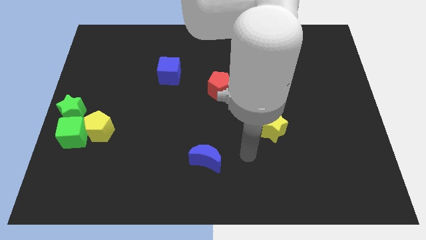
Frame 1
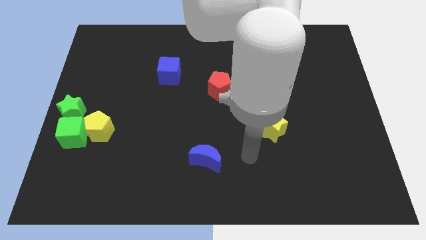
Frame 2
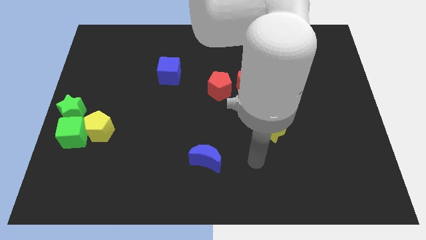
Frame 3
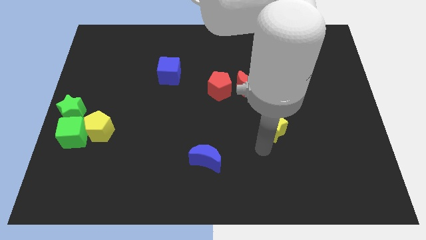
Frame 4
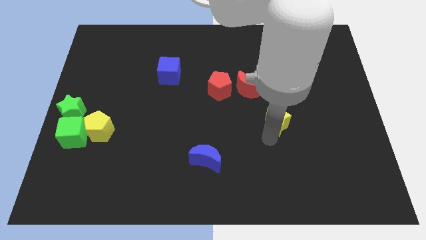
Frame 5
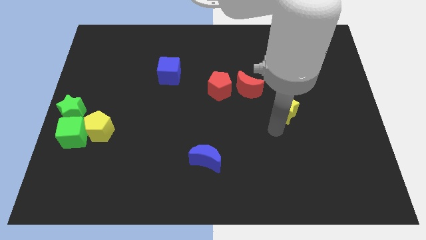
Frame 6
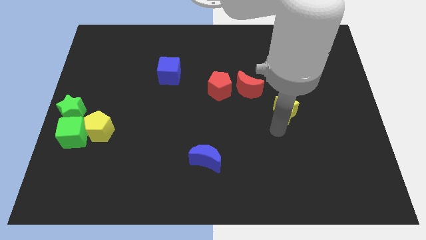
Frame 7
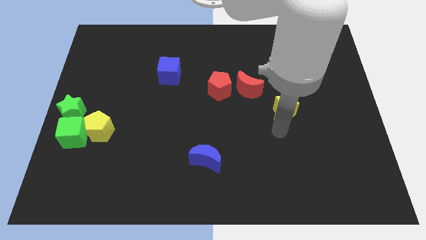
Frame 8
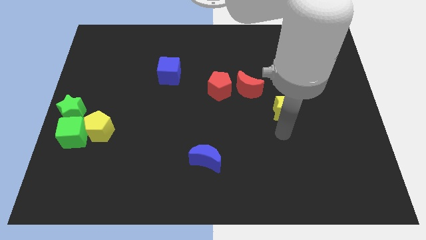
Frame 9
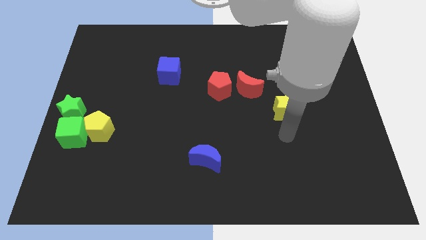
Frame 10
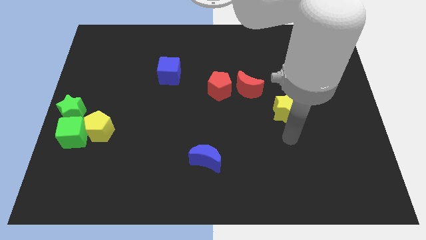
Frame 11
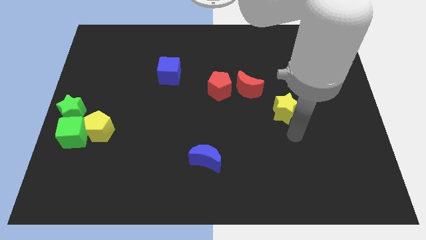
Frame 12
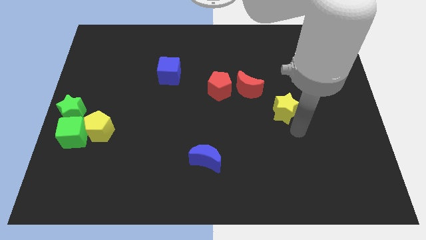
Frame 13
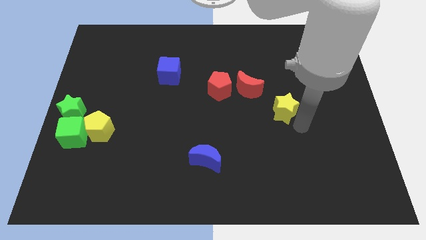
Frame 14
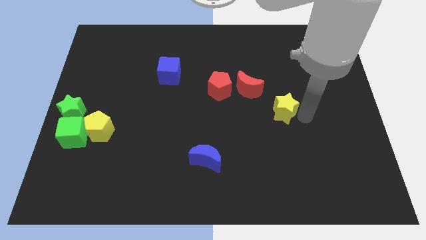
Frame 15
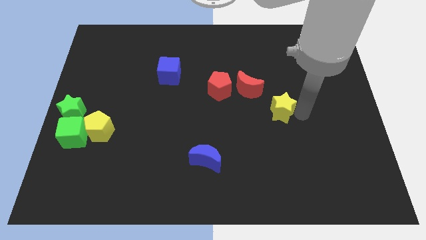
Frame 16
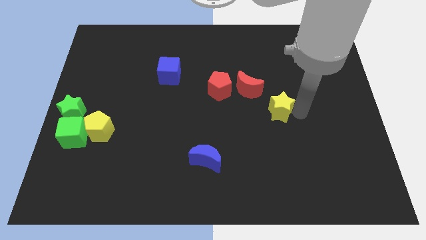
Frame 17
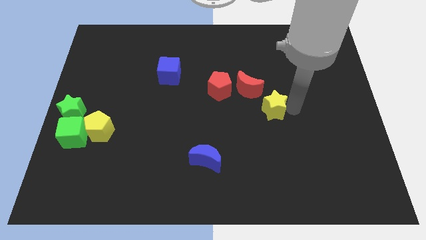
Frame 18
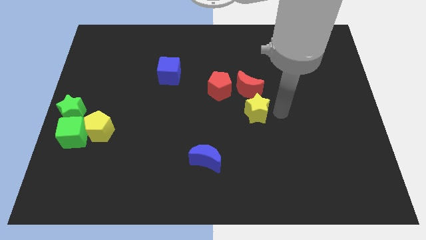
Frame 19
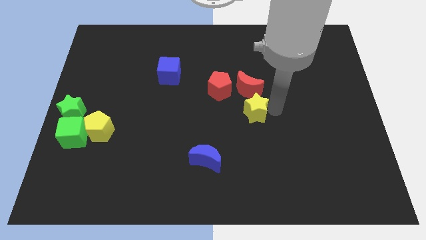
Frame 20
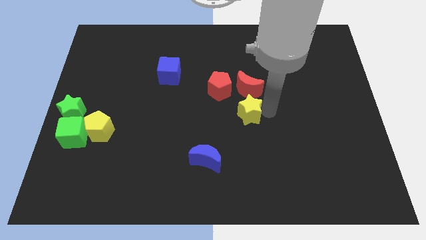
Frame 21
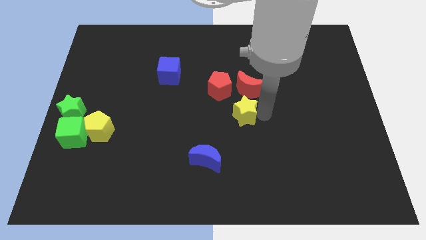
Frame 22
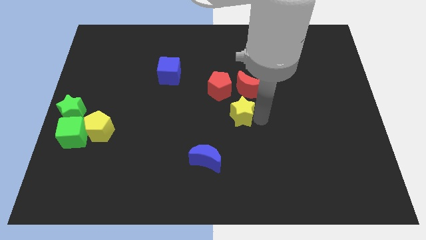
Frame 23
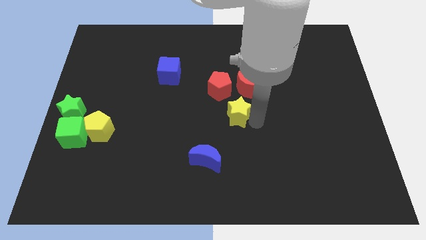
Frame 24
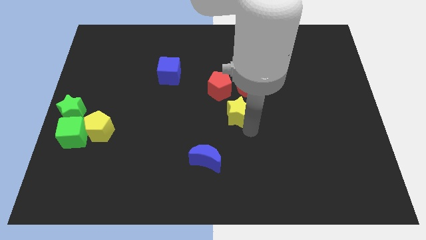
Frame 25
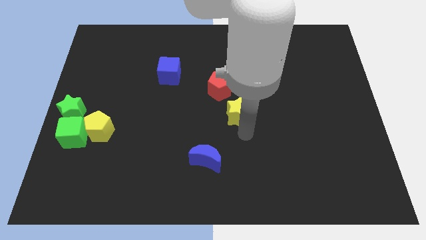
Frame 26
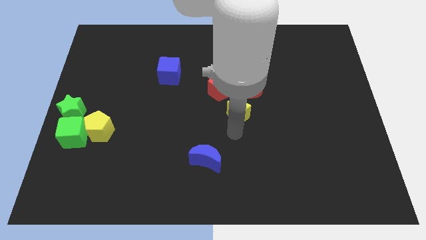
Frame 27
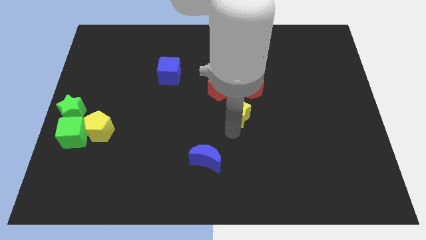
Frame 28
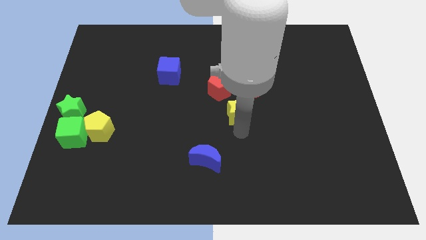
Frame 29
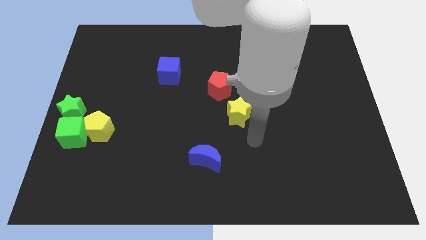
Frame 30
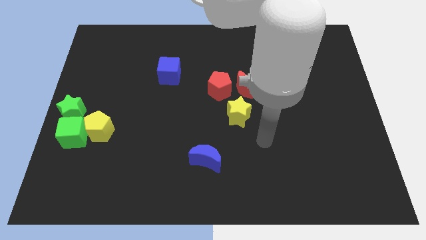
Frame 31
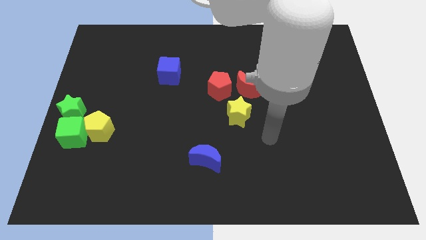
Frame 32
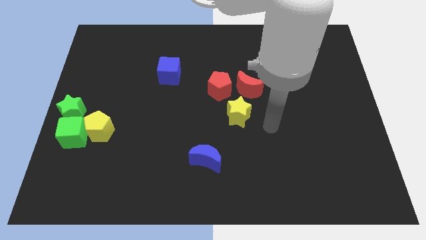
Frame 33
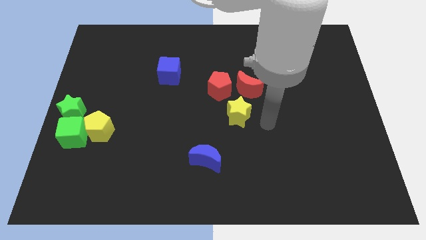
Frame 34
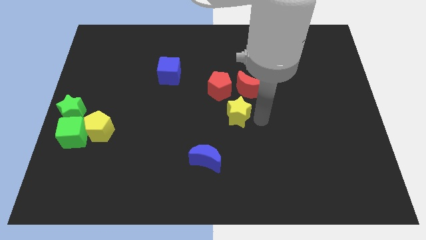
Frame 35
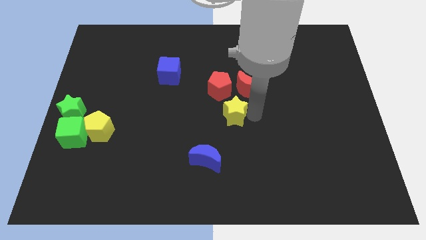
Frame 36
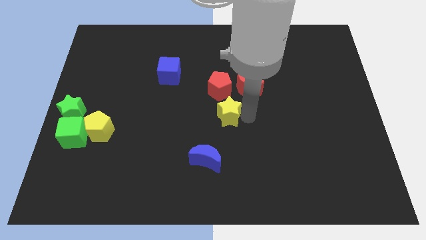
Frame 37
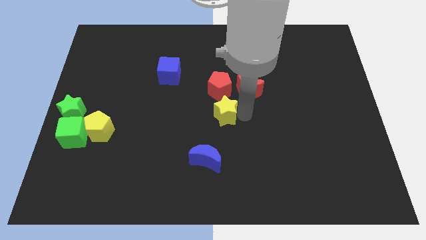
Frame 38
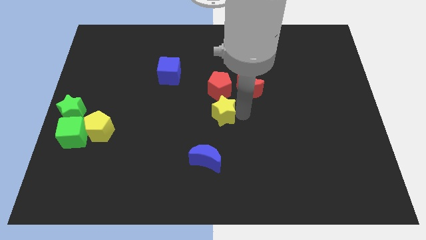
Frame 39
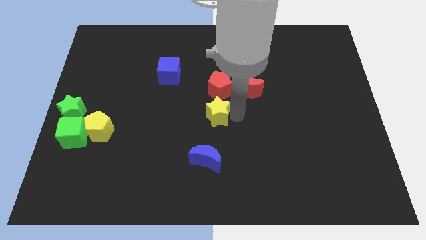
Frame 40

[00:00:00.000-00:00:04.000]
place the yellow star vertically below the red pentagon

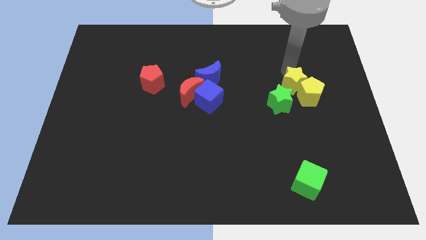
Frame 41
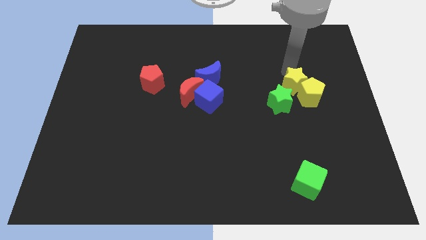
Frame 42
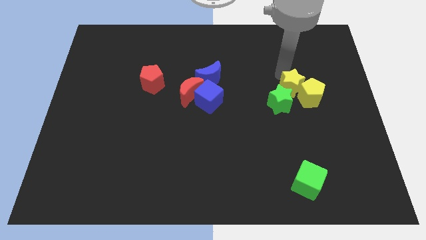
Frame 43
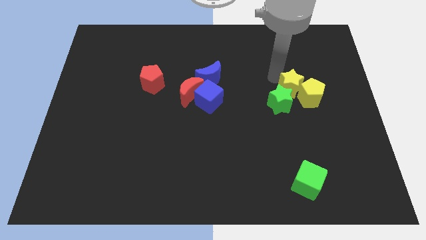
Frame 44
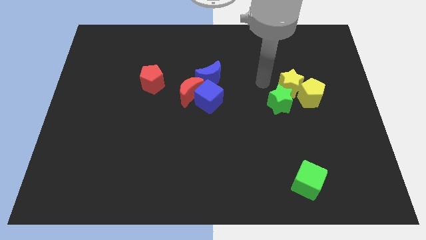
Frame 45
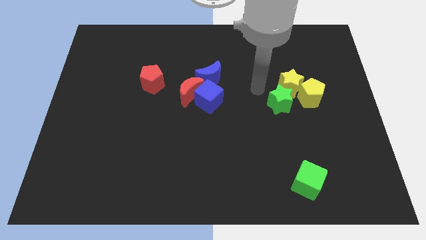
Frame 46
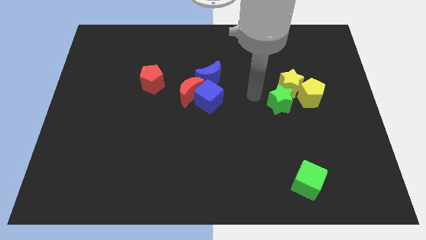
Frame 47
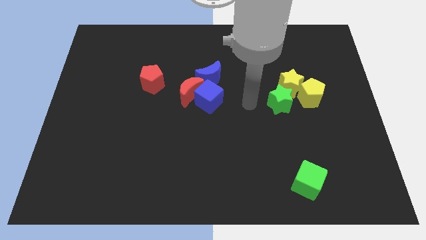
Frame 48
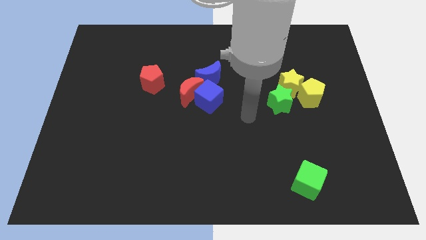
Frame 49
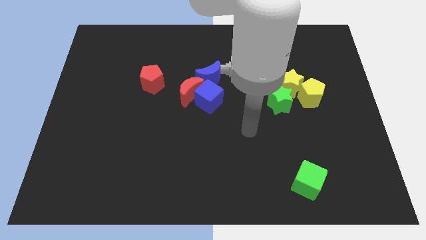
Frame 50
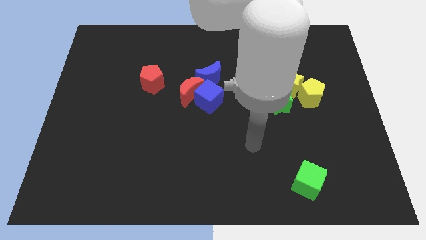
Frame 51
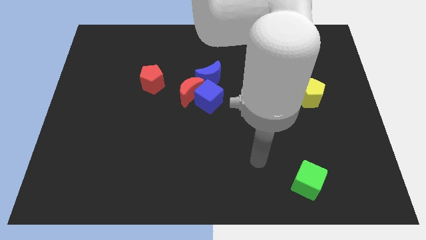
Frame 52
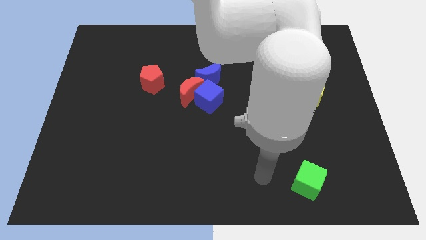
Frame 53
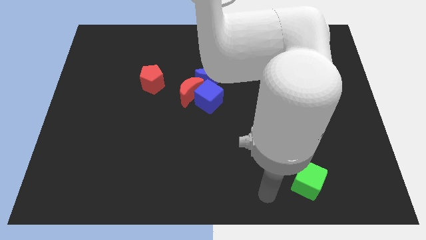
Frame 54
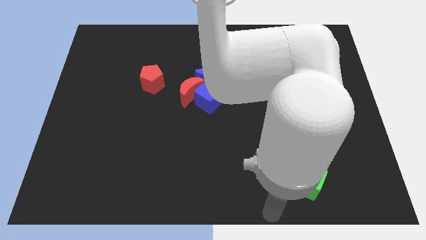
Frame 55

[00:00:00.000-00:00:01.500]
move the arm towards the bottom of the board

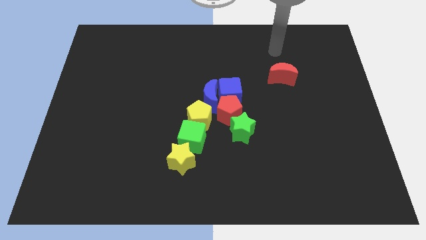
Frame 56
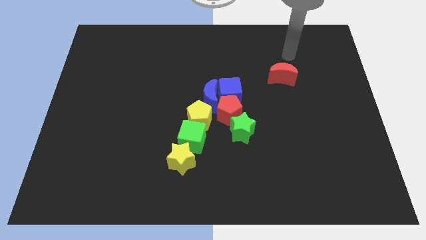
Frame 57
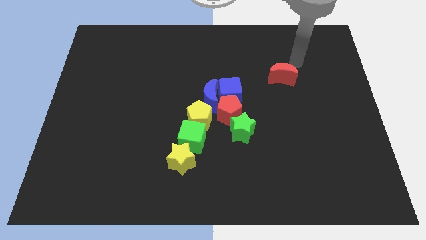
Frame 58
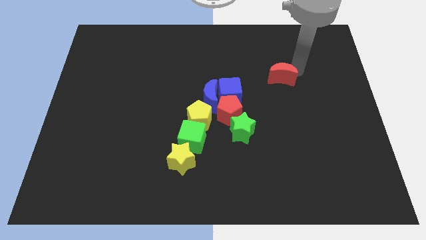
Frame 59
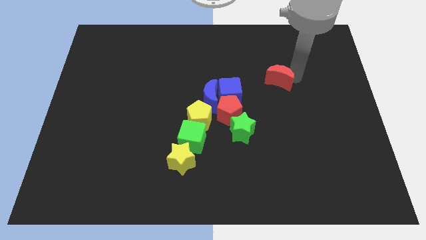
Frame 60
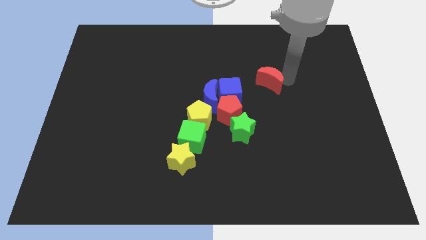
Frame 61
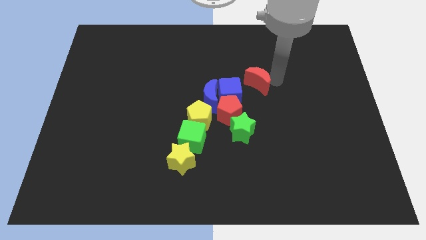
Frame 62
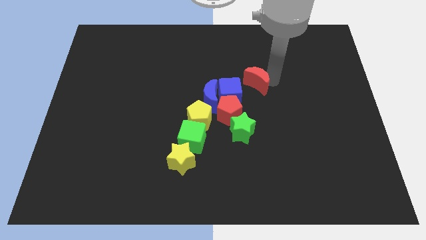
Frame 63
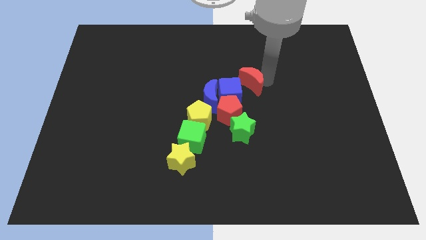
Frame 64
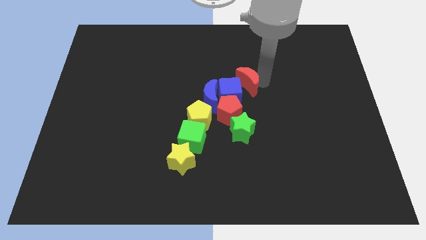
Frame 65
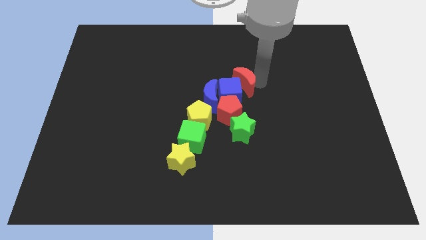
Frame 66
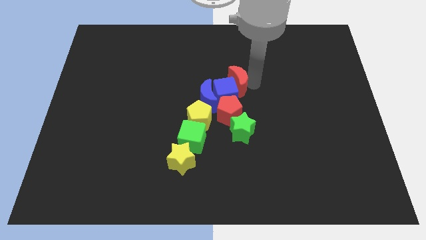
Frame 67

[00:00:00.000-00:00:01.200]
slide the red moon into the blue cube

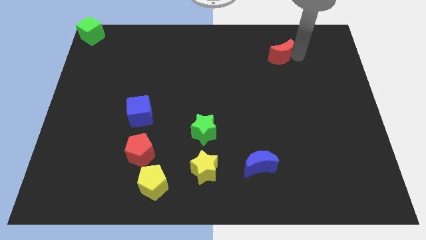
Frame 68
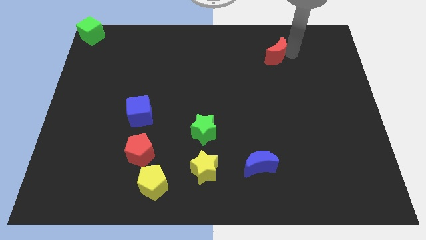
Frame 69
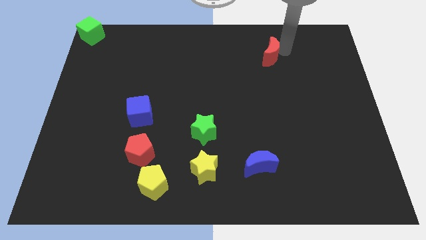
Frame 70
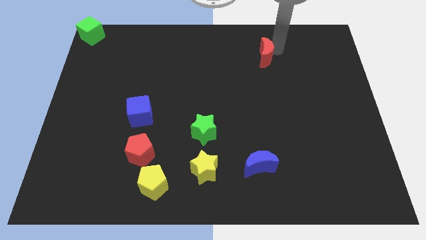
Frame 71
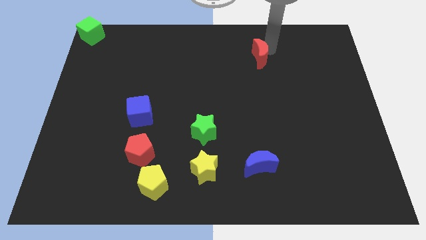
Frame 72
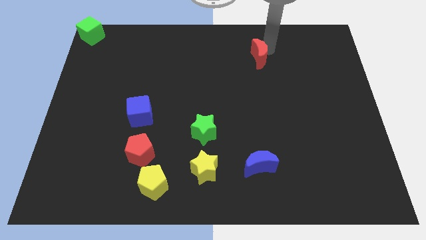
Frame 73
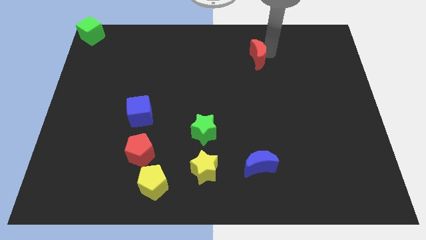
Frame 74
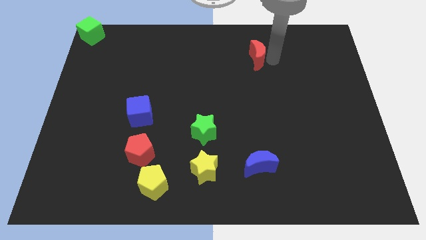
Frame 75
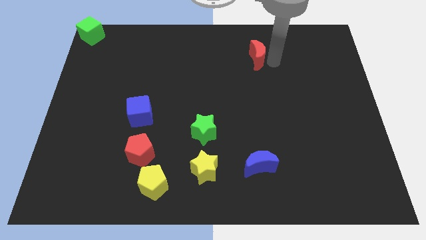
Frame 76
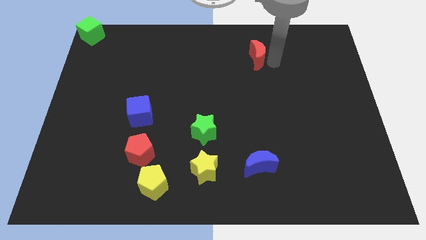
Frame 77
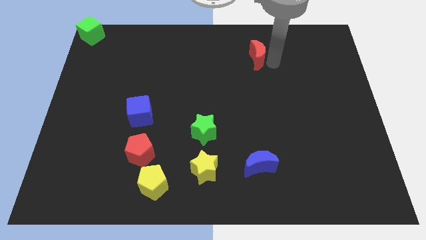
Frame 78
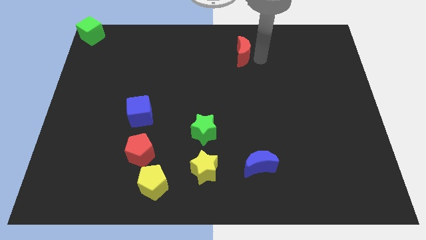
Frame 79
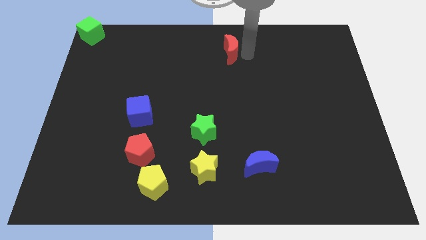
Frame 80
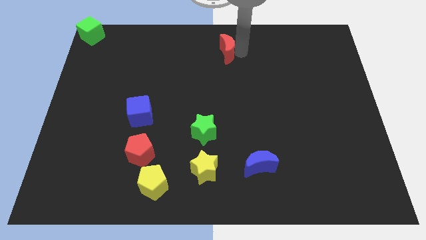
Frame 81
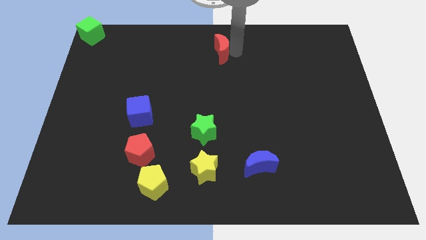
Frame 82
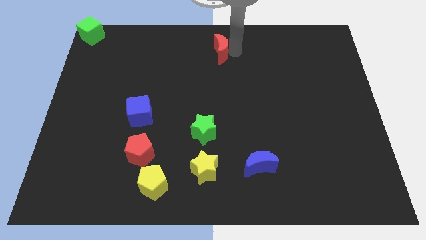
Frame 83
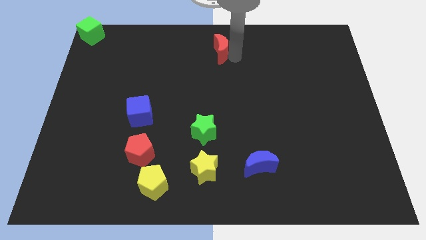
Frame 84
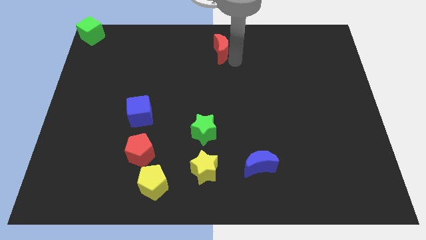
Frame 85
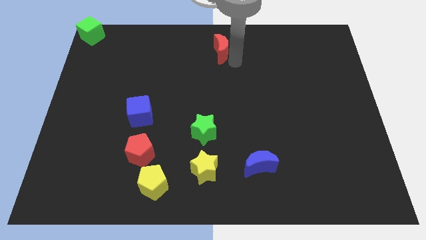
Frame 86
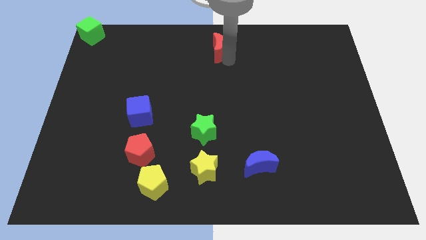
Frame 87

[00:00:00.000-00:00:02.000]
move the red moon to top center

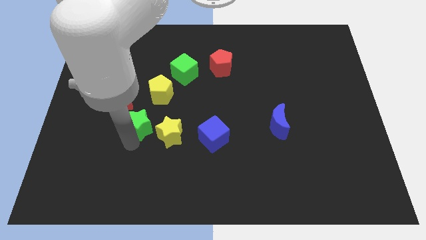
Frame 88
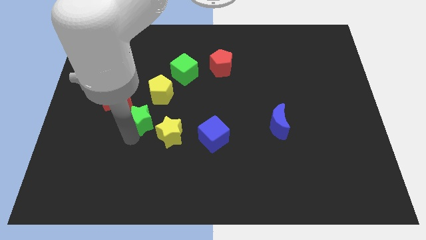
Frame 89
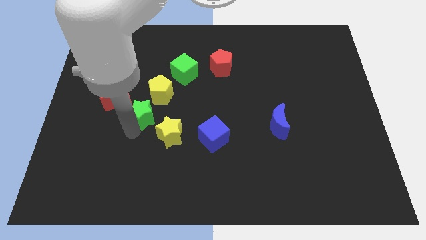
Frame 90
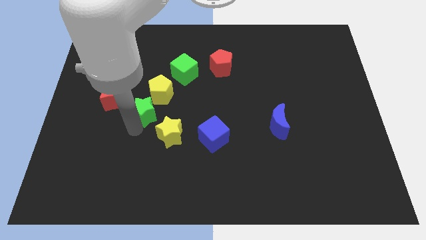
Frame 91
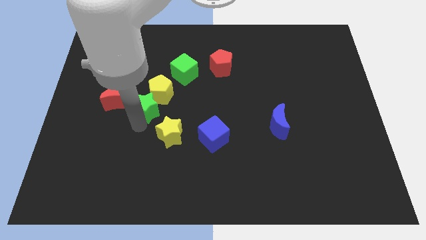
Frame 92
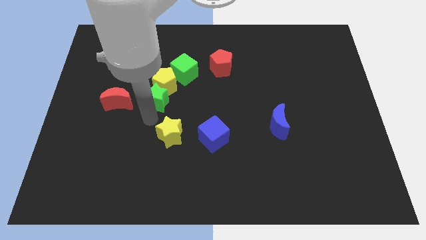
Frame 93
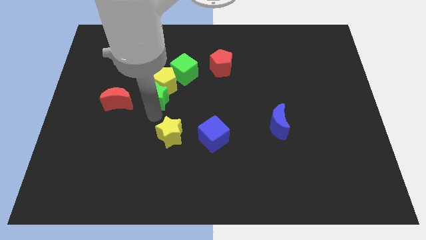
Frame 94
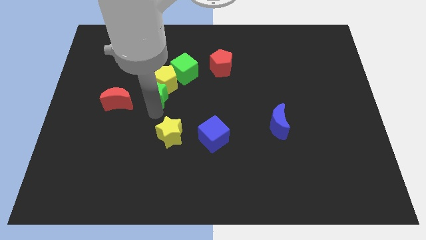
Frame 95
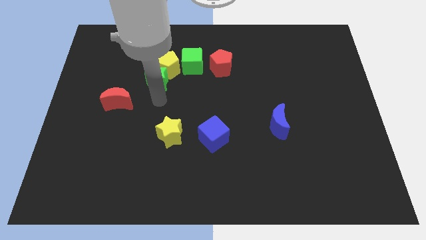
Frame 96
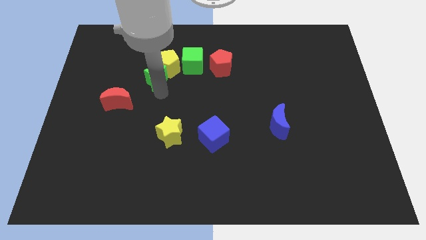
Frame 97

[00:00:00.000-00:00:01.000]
push green star in yellow pentagon
